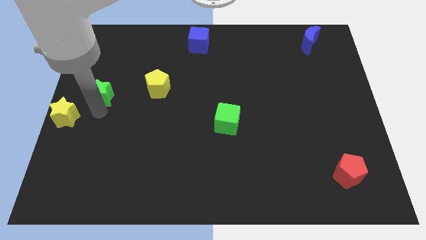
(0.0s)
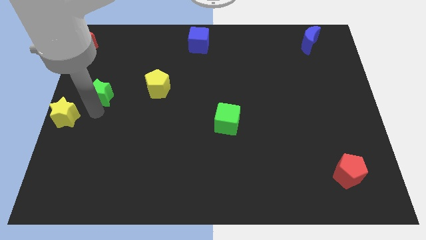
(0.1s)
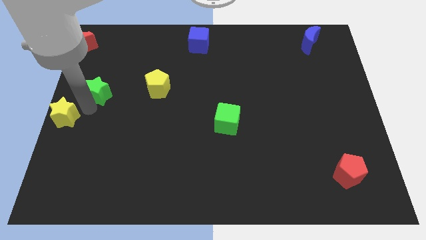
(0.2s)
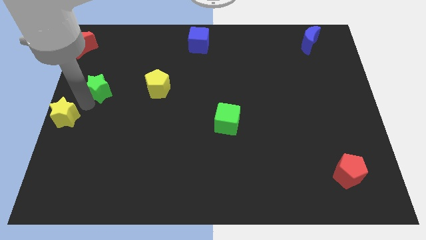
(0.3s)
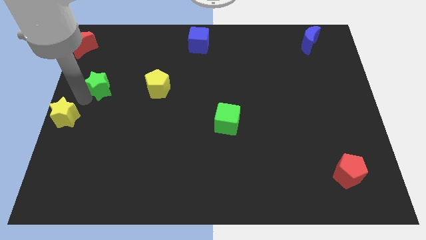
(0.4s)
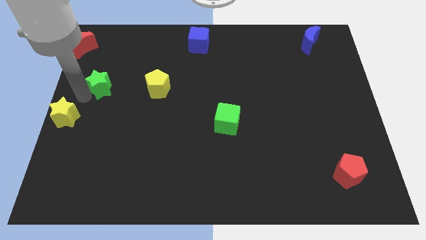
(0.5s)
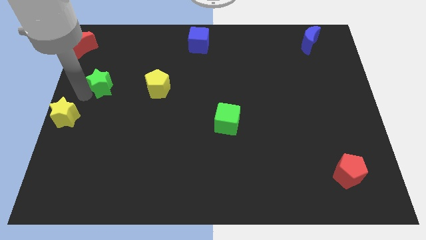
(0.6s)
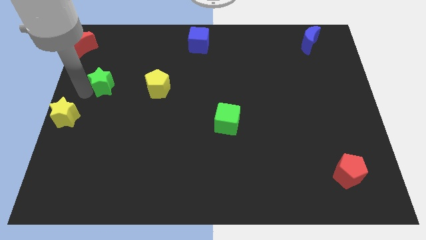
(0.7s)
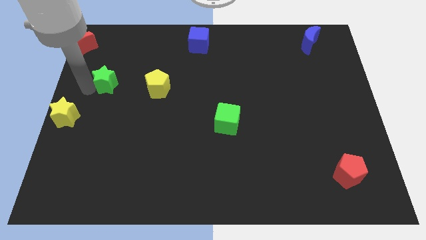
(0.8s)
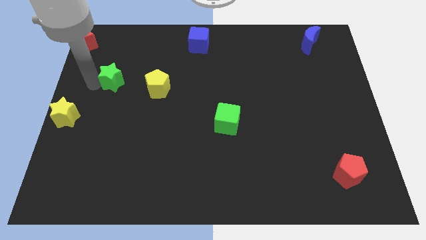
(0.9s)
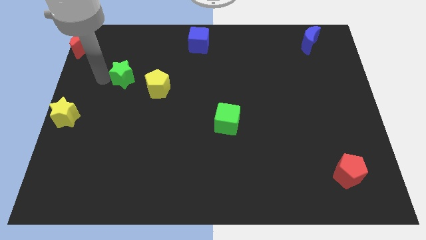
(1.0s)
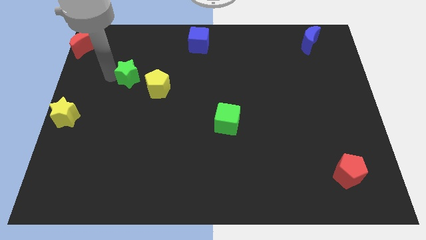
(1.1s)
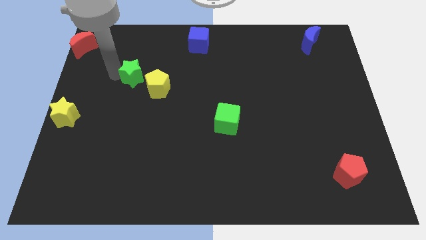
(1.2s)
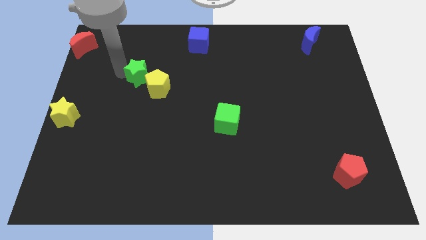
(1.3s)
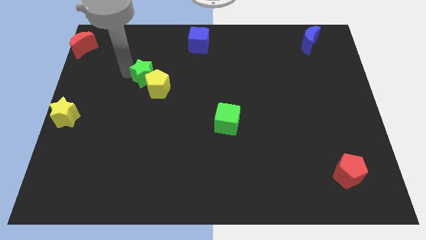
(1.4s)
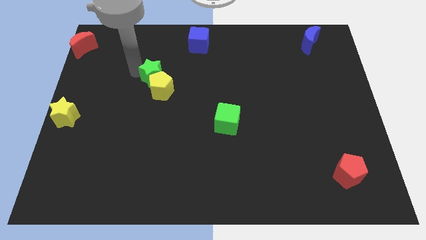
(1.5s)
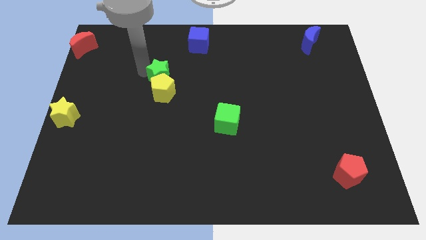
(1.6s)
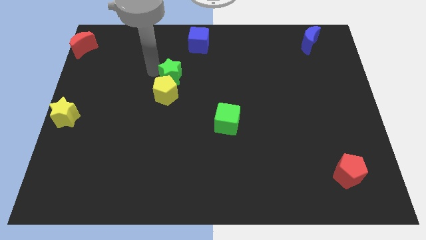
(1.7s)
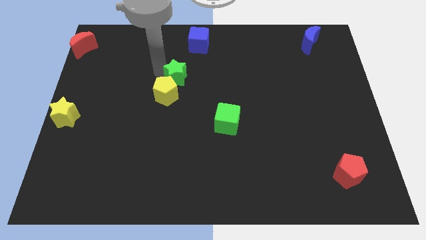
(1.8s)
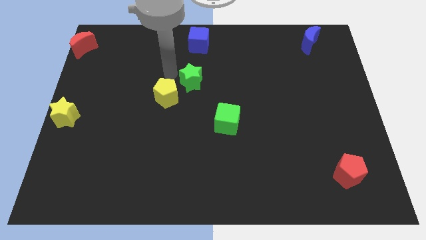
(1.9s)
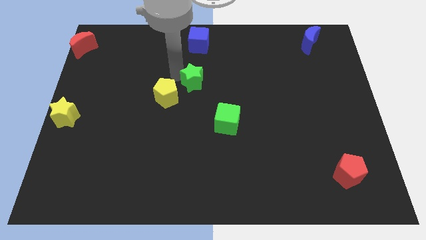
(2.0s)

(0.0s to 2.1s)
move the green star above the yellow pentagon

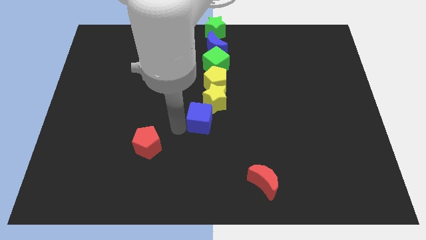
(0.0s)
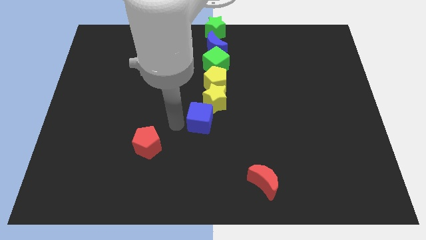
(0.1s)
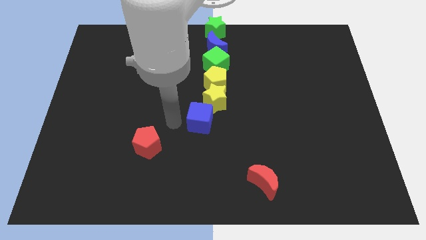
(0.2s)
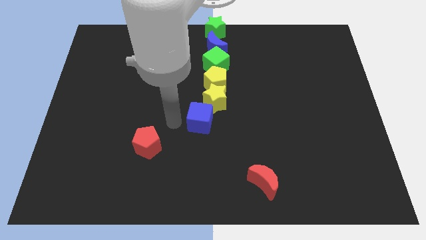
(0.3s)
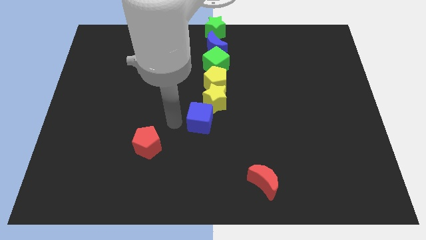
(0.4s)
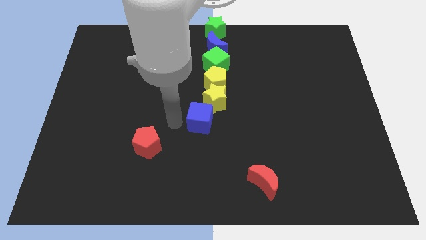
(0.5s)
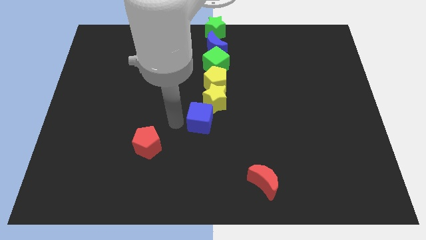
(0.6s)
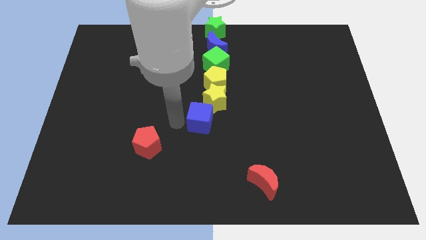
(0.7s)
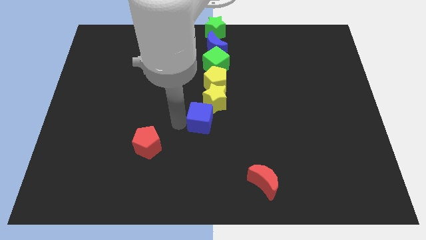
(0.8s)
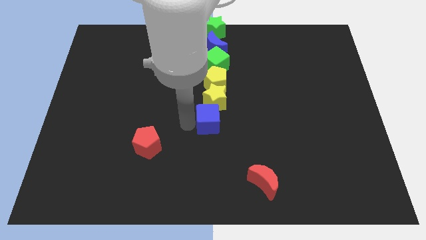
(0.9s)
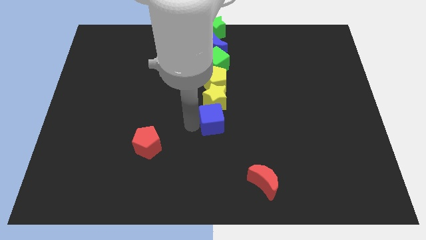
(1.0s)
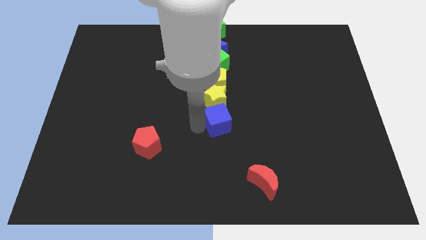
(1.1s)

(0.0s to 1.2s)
put the blue cube below the yellow star

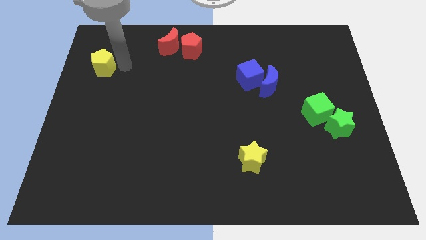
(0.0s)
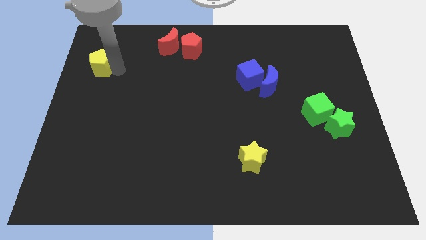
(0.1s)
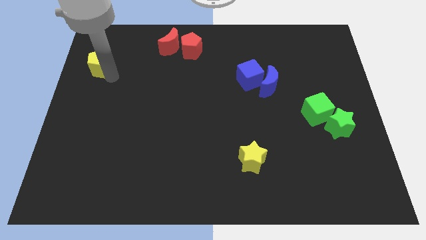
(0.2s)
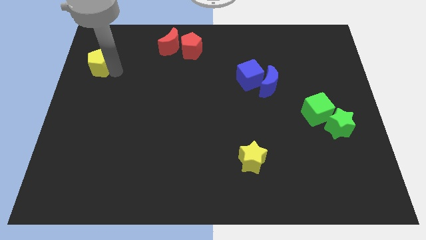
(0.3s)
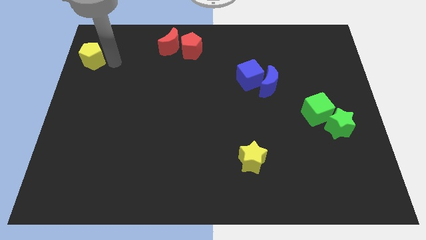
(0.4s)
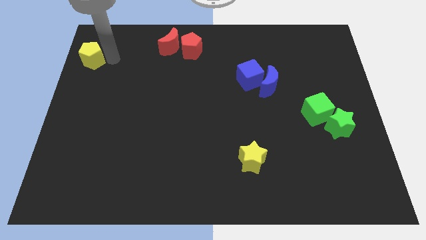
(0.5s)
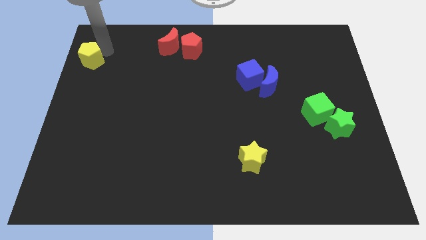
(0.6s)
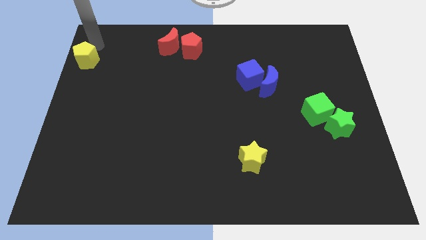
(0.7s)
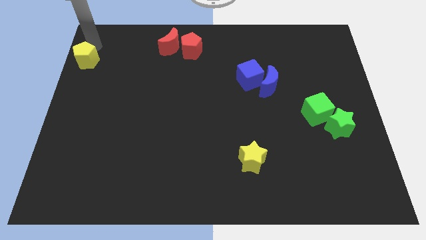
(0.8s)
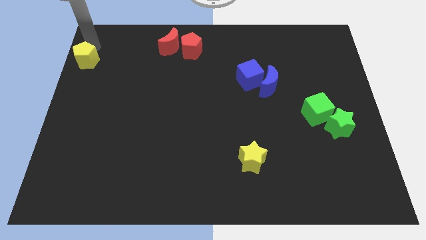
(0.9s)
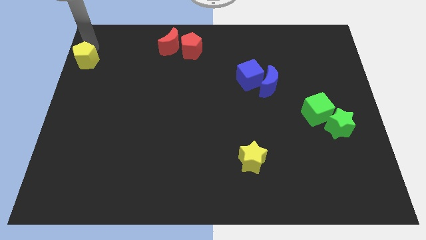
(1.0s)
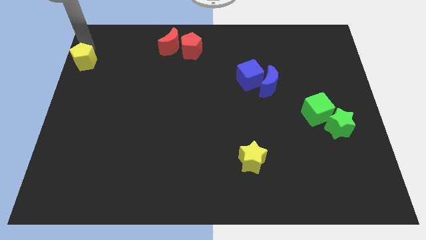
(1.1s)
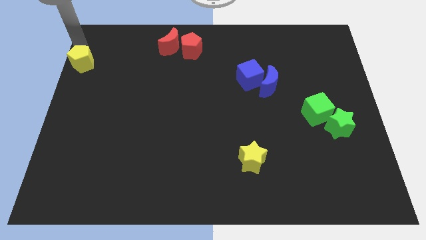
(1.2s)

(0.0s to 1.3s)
push the yellow pentagon to the left

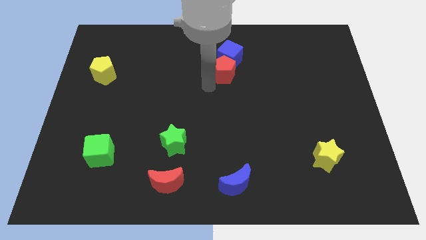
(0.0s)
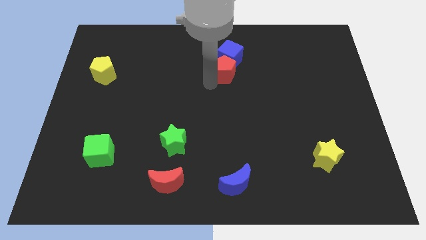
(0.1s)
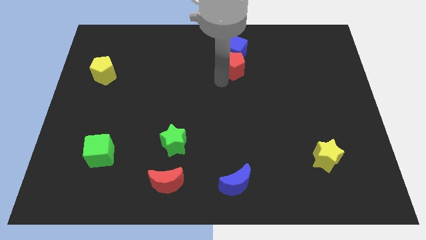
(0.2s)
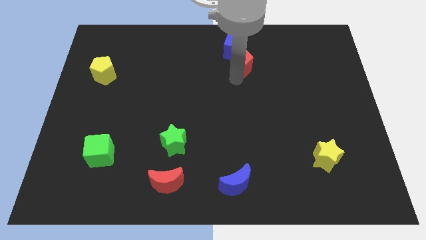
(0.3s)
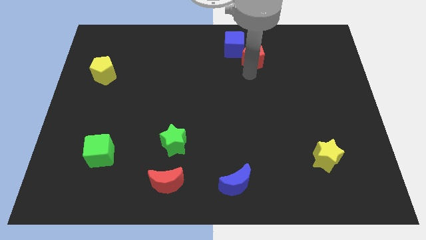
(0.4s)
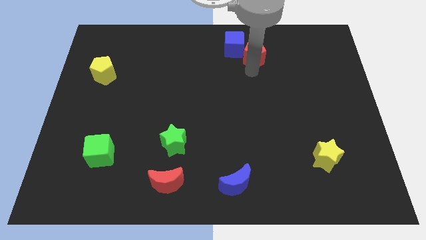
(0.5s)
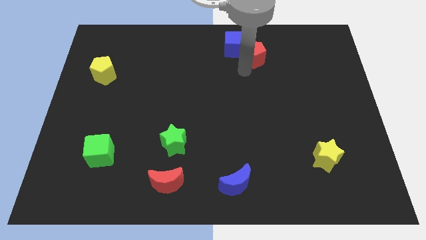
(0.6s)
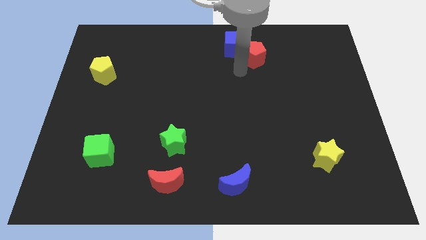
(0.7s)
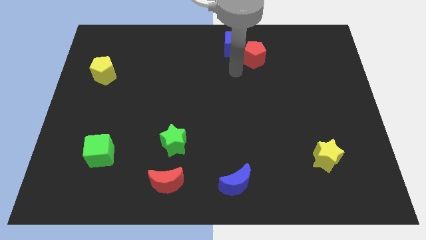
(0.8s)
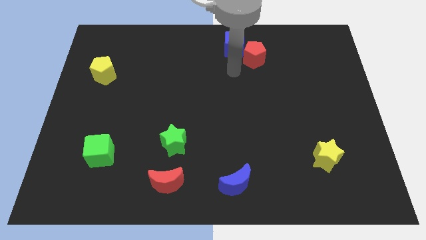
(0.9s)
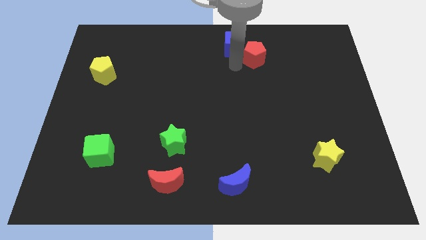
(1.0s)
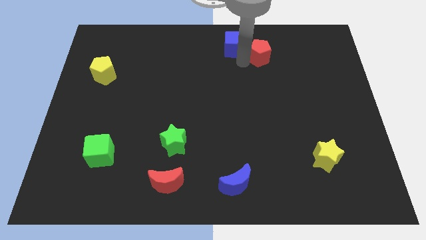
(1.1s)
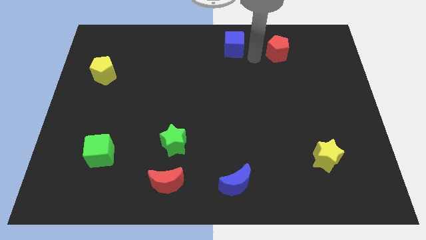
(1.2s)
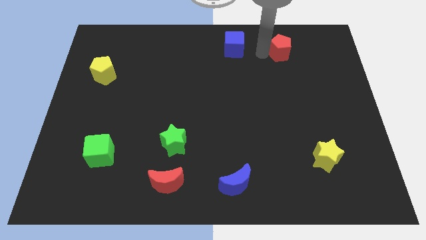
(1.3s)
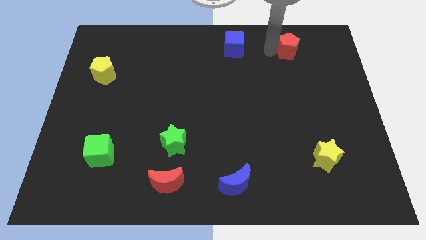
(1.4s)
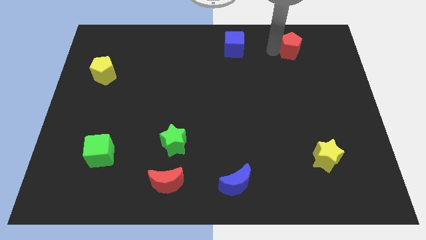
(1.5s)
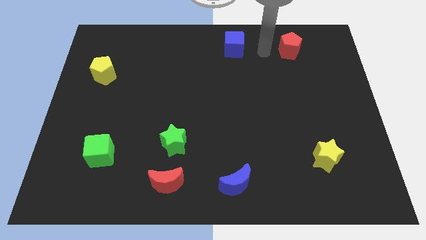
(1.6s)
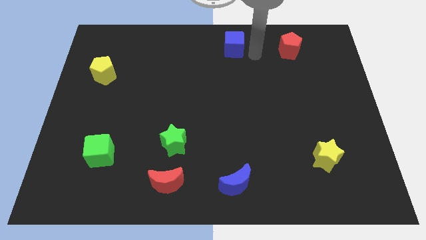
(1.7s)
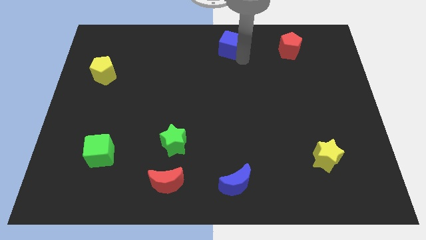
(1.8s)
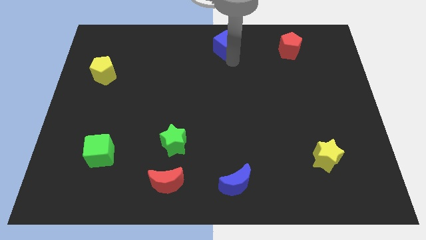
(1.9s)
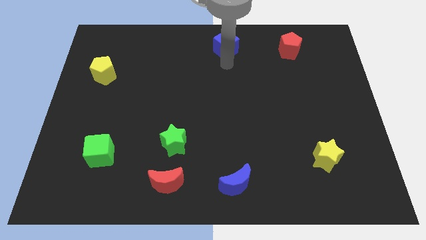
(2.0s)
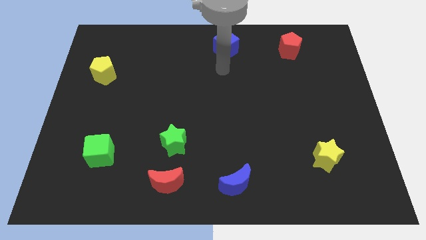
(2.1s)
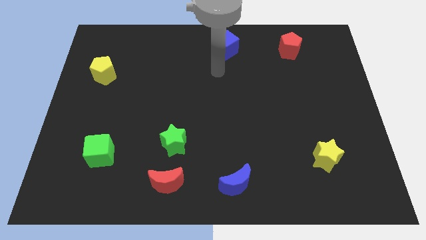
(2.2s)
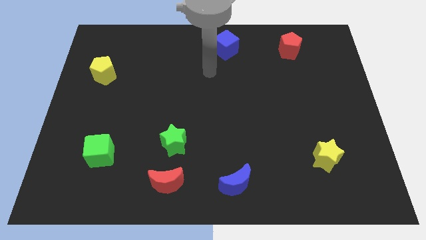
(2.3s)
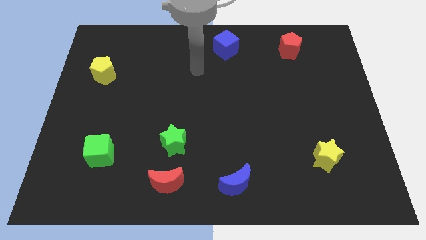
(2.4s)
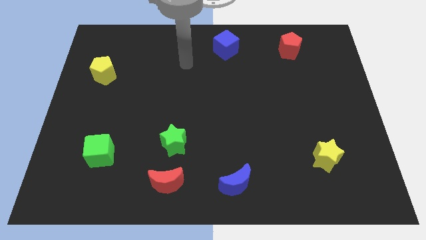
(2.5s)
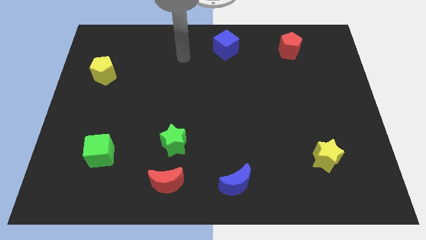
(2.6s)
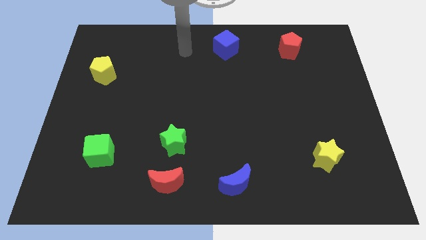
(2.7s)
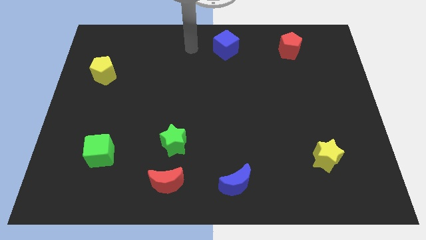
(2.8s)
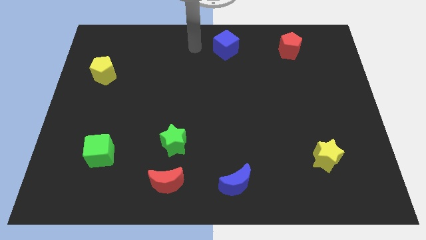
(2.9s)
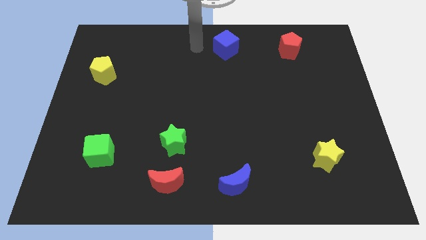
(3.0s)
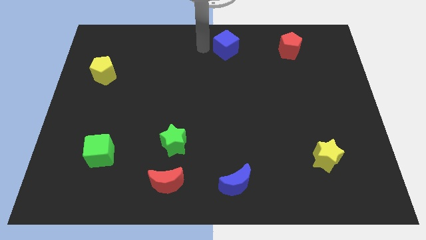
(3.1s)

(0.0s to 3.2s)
separate red pentagon and the blue cube

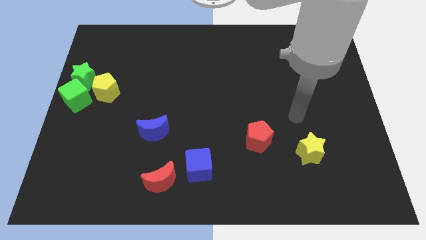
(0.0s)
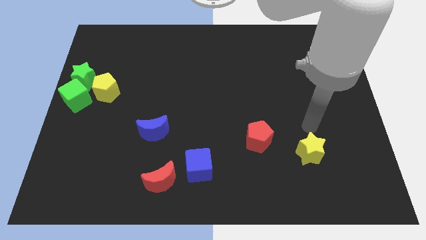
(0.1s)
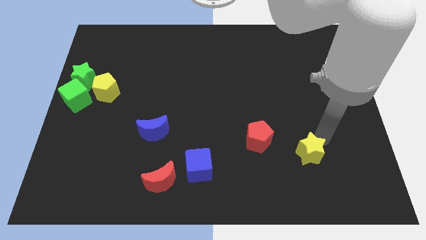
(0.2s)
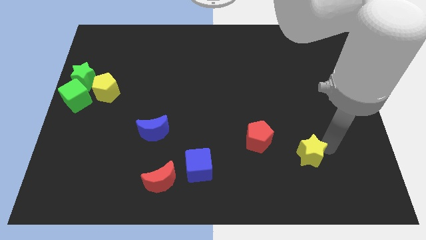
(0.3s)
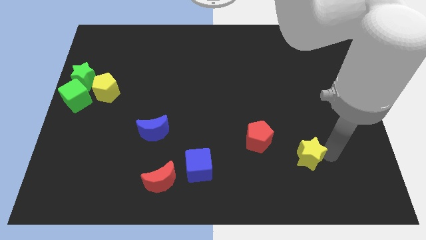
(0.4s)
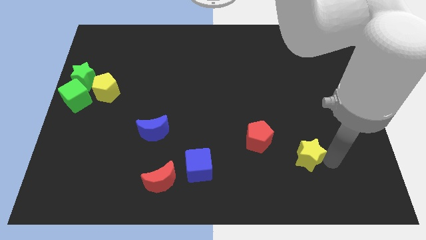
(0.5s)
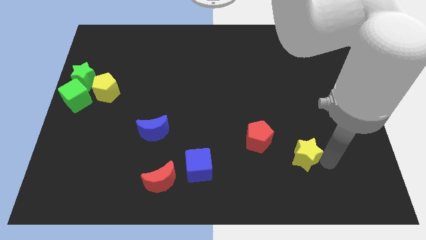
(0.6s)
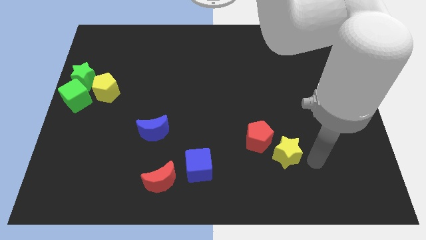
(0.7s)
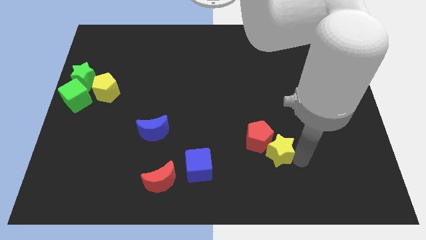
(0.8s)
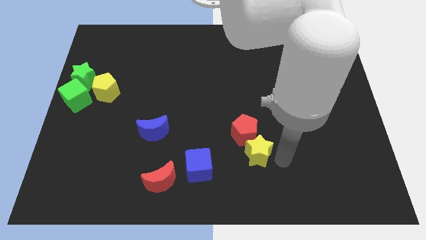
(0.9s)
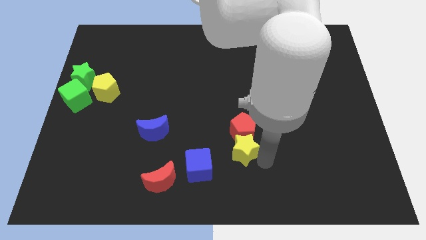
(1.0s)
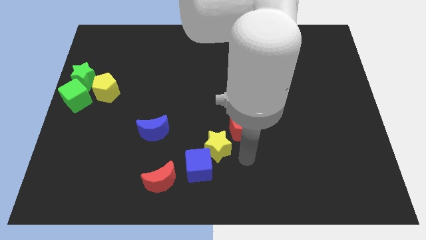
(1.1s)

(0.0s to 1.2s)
push the yellow star into the red pentagon
